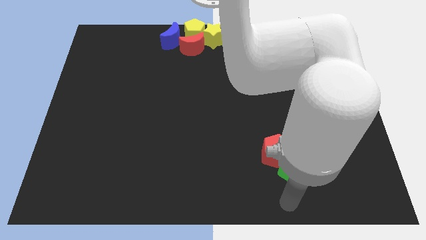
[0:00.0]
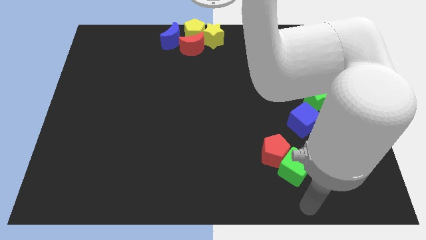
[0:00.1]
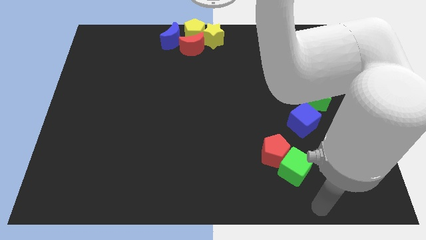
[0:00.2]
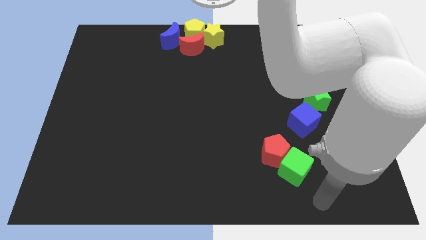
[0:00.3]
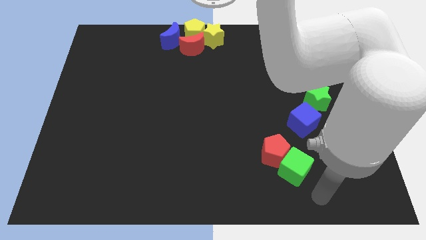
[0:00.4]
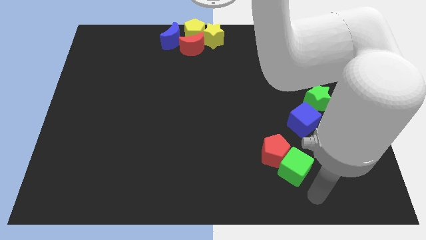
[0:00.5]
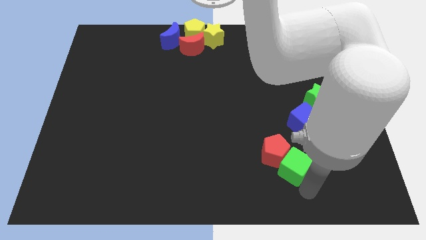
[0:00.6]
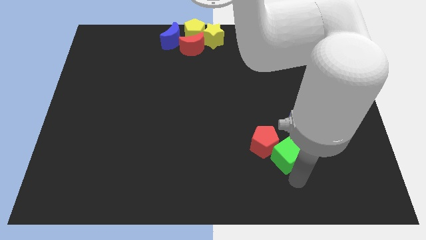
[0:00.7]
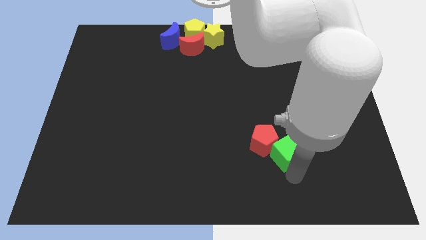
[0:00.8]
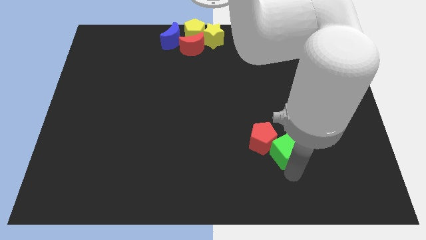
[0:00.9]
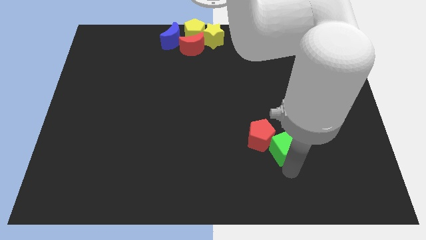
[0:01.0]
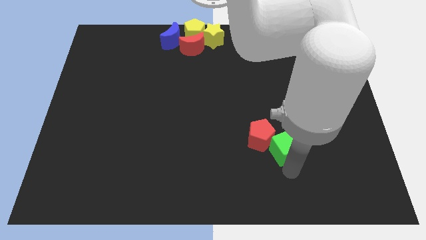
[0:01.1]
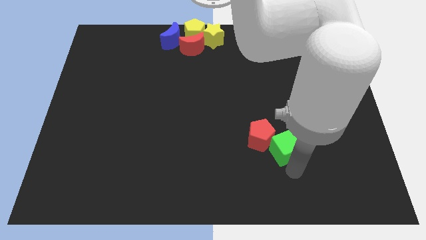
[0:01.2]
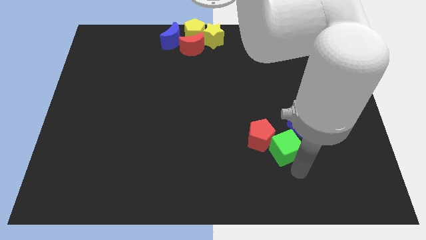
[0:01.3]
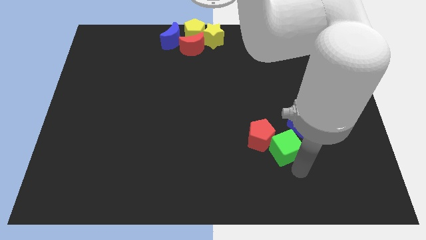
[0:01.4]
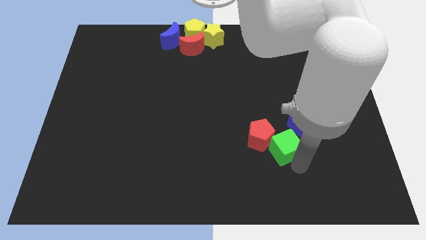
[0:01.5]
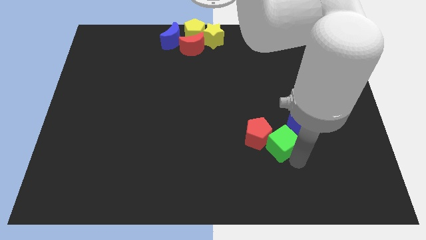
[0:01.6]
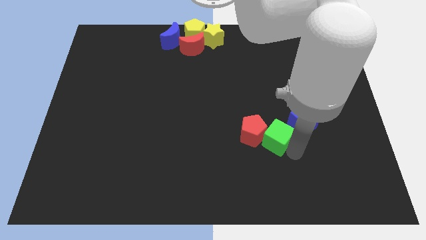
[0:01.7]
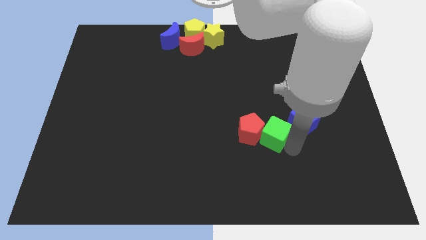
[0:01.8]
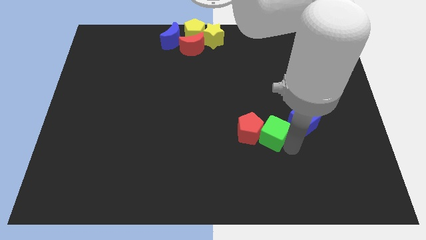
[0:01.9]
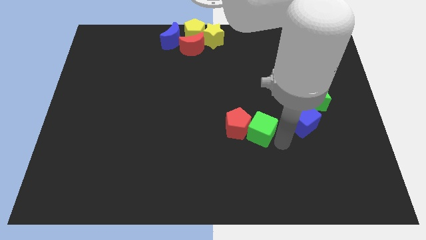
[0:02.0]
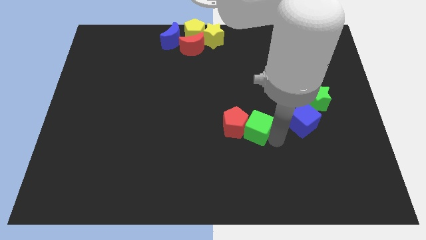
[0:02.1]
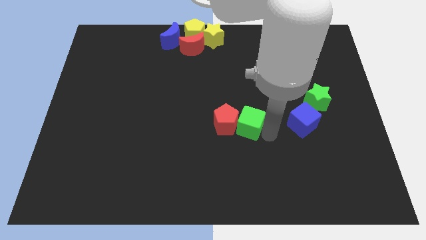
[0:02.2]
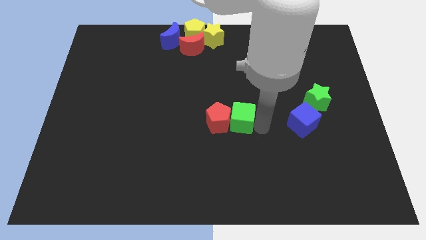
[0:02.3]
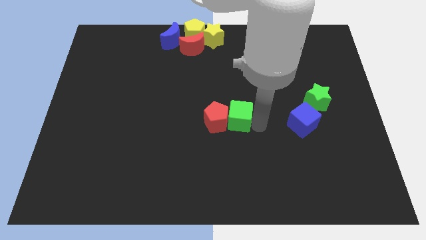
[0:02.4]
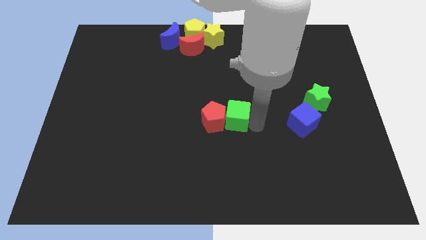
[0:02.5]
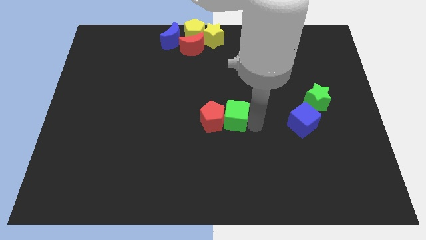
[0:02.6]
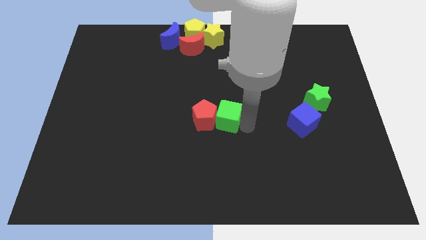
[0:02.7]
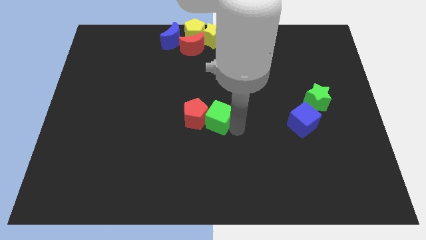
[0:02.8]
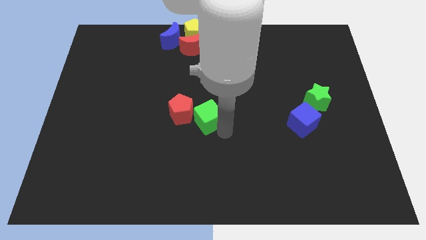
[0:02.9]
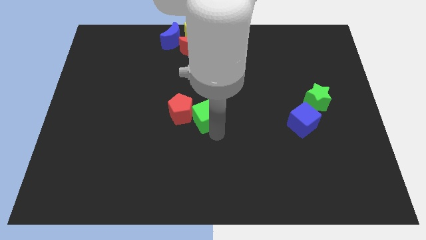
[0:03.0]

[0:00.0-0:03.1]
drag green cube along with red pentagon to the center

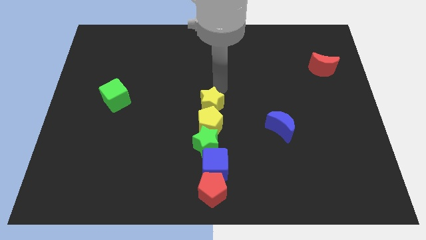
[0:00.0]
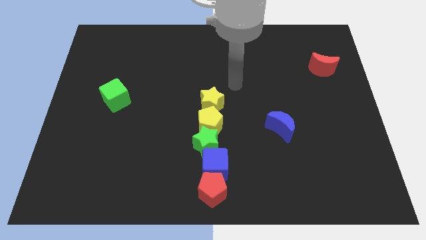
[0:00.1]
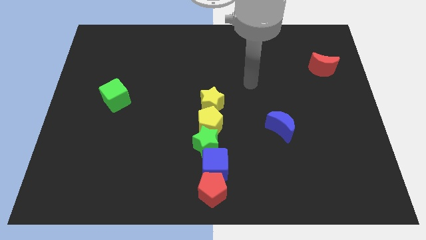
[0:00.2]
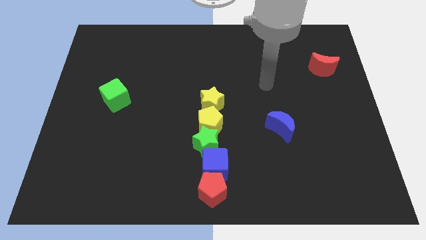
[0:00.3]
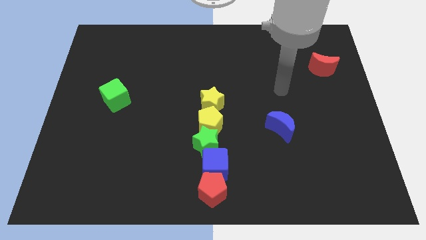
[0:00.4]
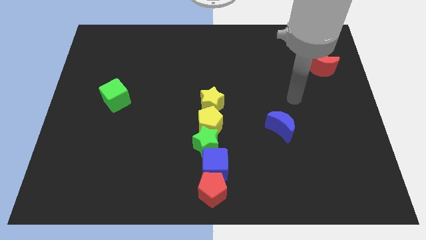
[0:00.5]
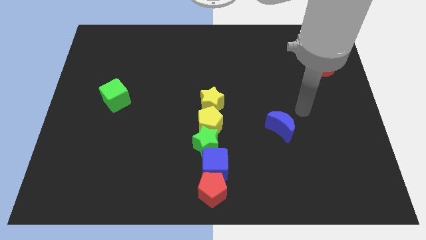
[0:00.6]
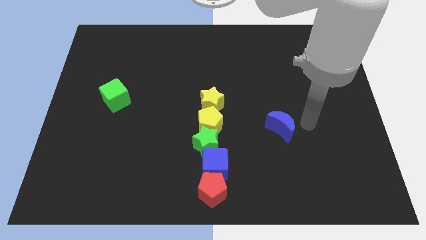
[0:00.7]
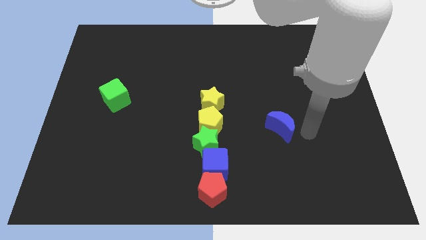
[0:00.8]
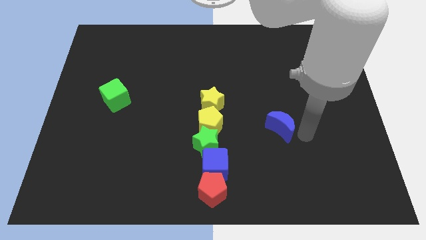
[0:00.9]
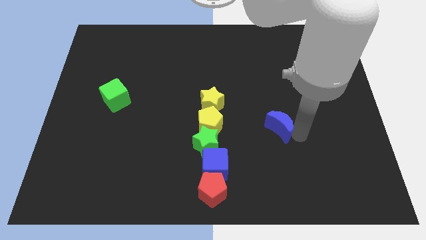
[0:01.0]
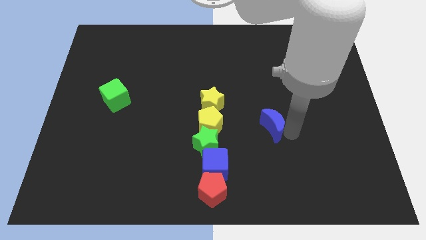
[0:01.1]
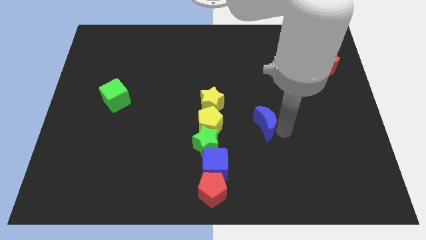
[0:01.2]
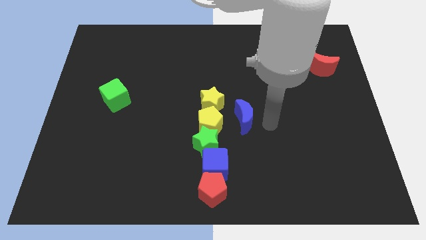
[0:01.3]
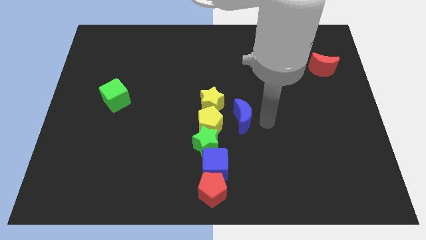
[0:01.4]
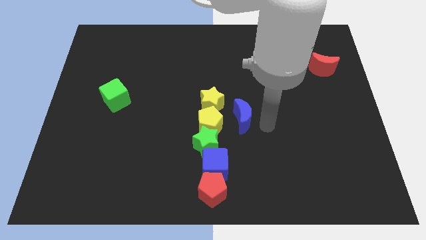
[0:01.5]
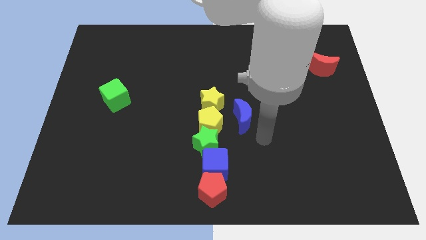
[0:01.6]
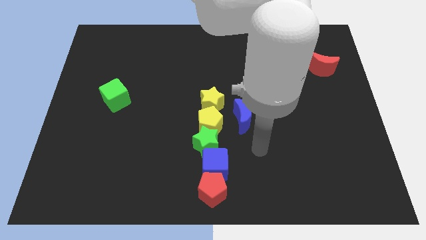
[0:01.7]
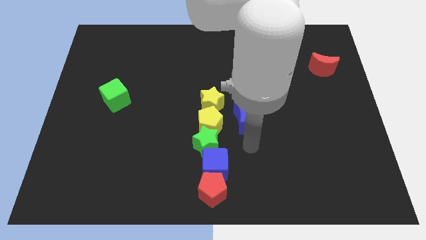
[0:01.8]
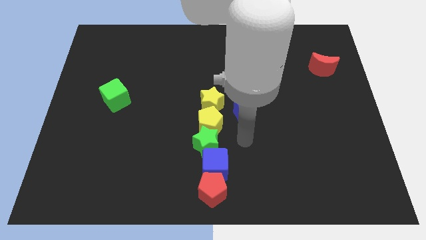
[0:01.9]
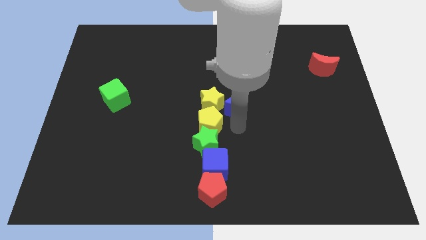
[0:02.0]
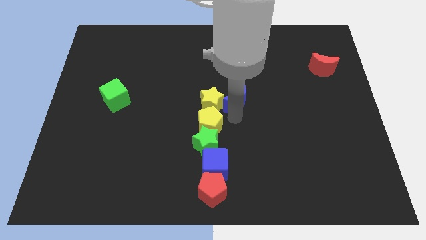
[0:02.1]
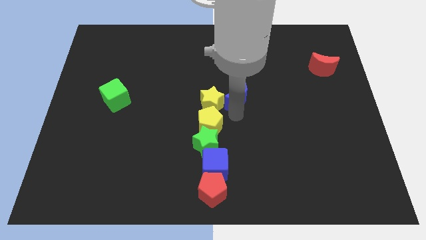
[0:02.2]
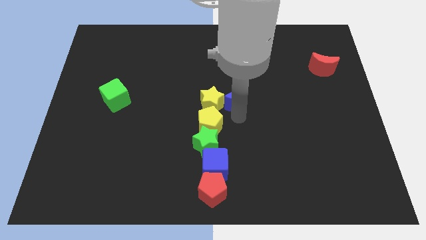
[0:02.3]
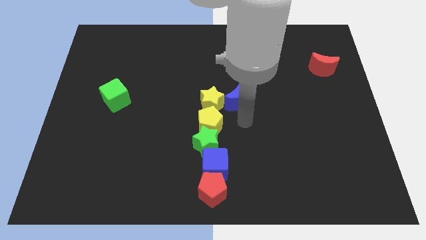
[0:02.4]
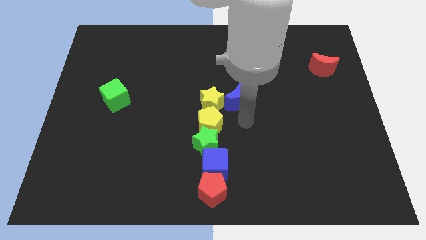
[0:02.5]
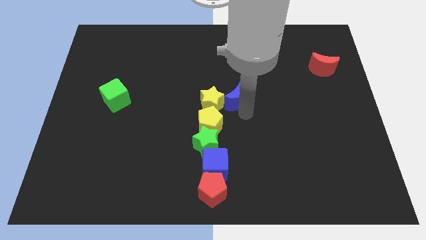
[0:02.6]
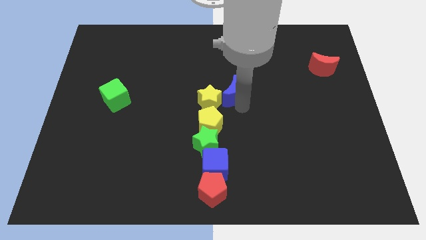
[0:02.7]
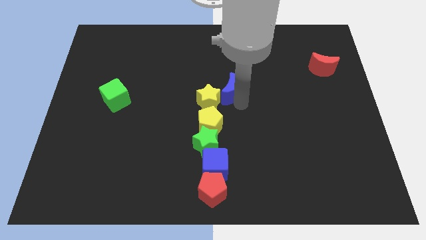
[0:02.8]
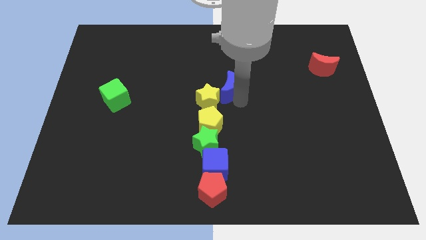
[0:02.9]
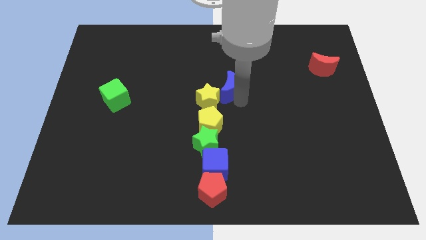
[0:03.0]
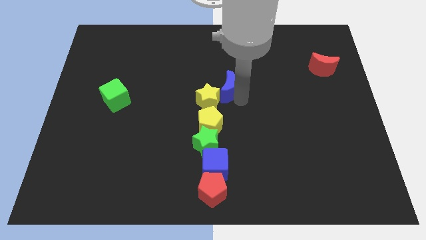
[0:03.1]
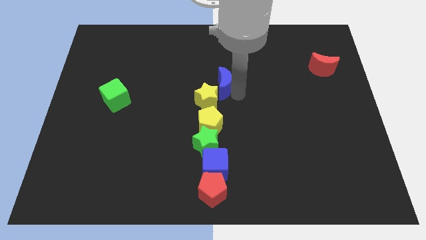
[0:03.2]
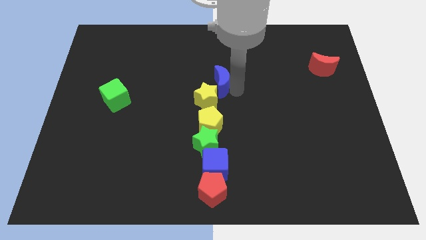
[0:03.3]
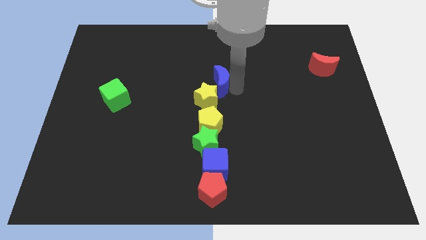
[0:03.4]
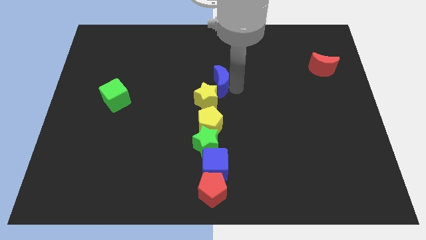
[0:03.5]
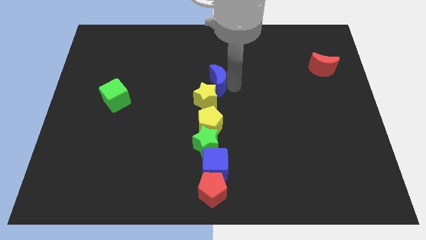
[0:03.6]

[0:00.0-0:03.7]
slide the blue crescent into the yellow star

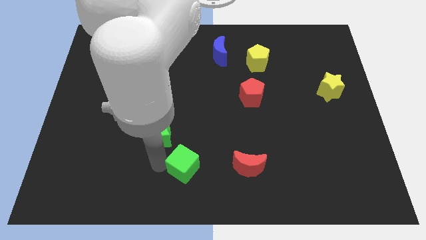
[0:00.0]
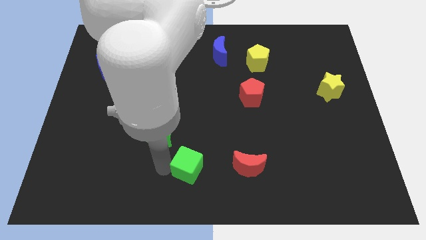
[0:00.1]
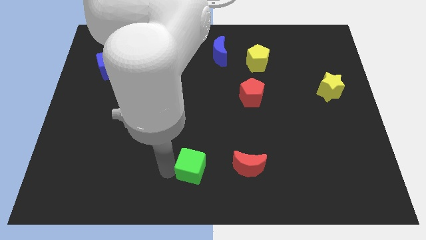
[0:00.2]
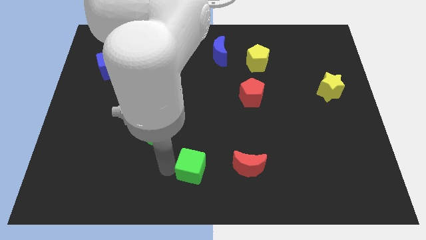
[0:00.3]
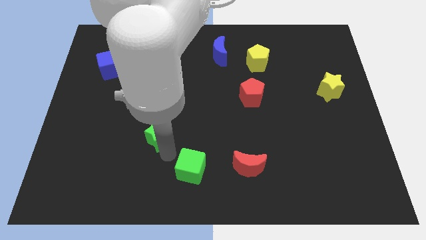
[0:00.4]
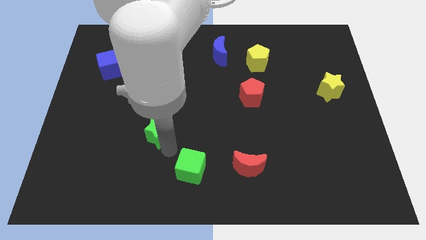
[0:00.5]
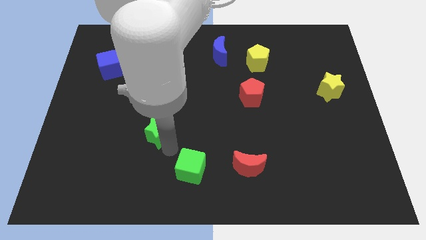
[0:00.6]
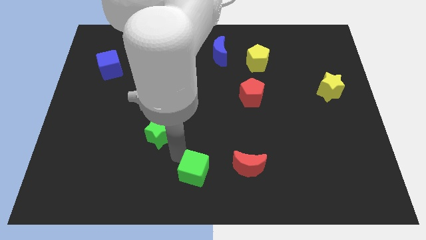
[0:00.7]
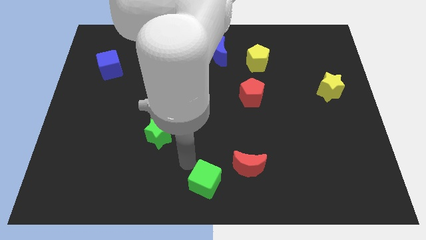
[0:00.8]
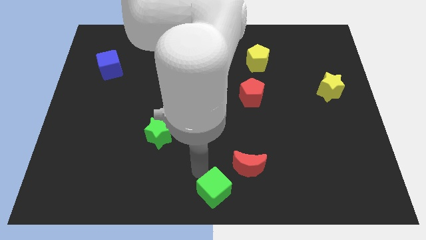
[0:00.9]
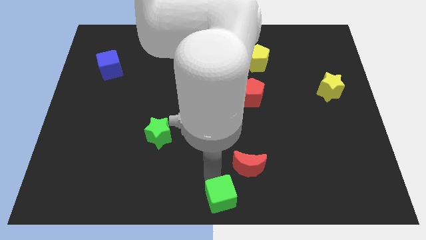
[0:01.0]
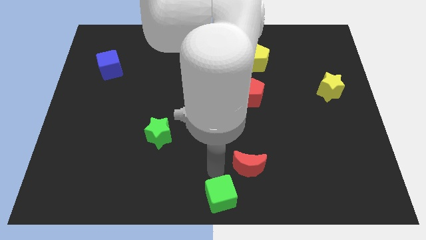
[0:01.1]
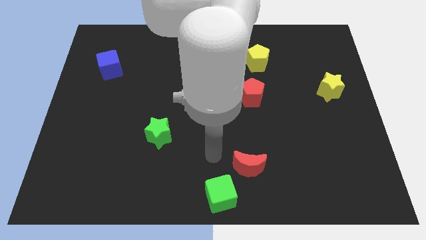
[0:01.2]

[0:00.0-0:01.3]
place green cube to bottom center

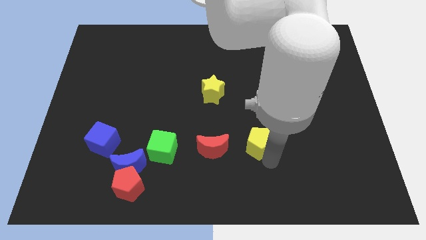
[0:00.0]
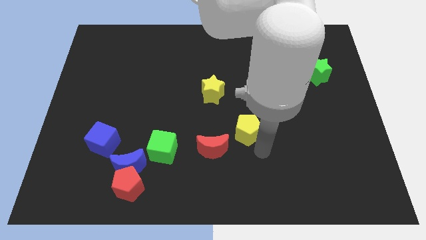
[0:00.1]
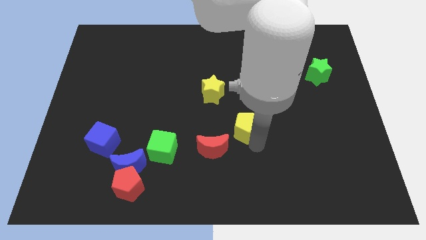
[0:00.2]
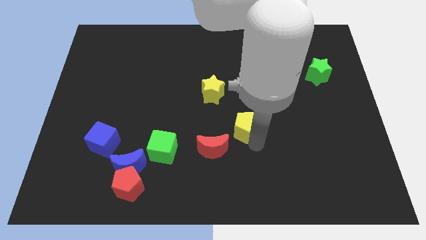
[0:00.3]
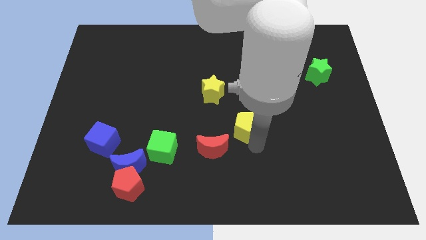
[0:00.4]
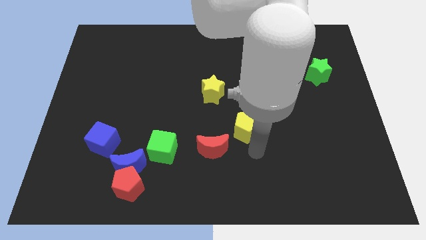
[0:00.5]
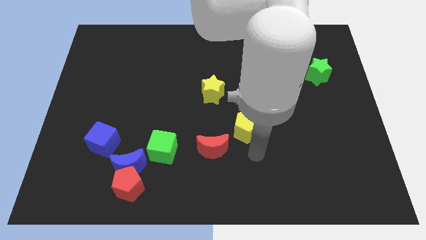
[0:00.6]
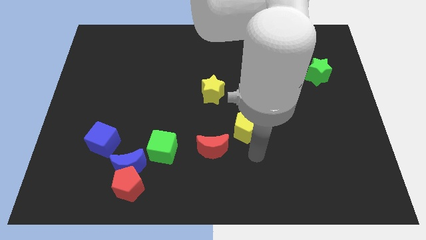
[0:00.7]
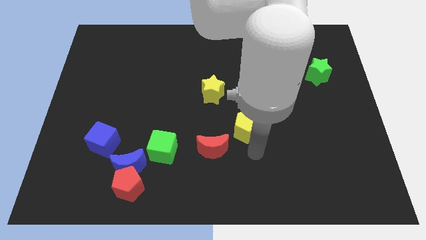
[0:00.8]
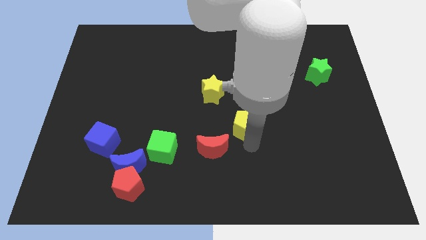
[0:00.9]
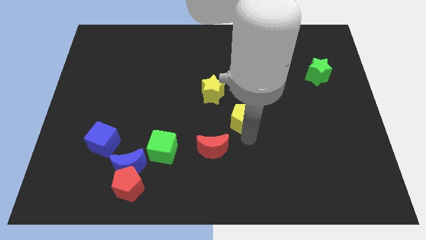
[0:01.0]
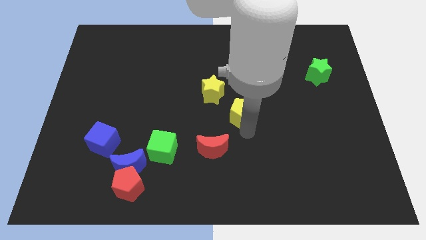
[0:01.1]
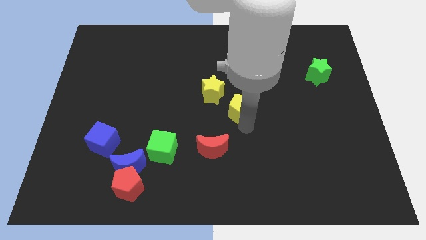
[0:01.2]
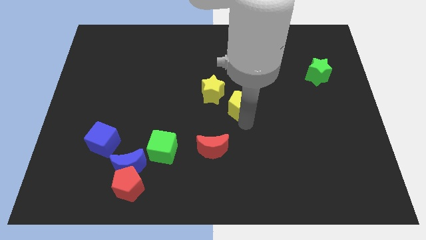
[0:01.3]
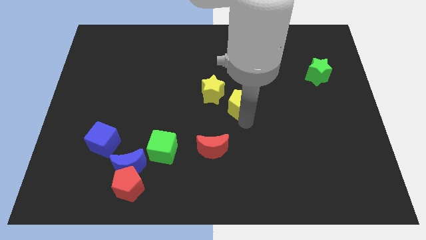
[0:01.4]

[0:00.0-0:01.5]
move the yellow pentagon towards the yellow star
